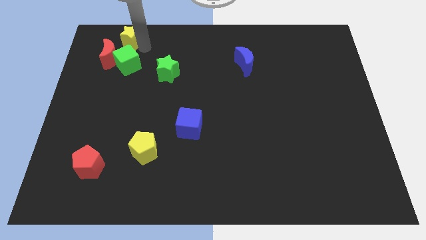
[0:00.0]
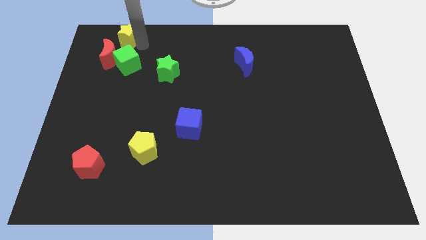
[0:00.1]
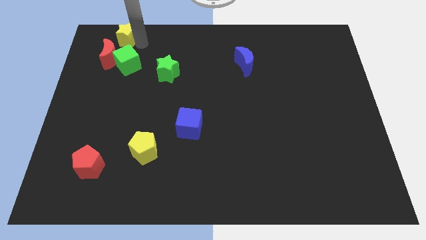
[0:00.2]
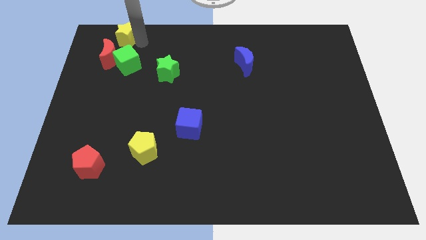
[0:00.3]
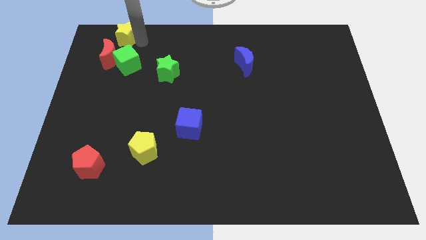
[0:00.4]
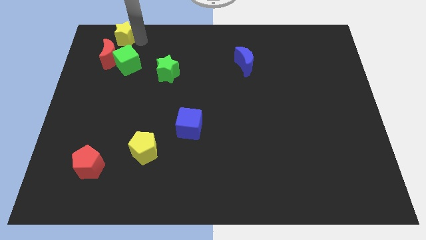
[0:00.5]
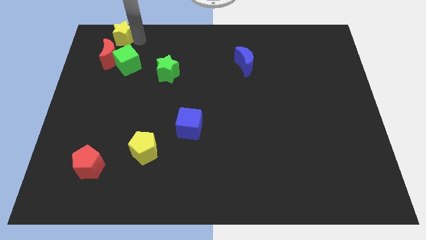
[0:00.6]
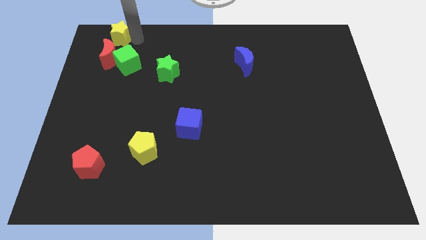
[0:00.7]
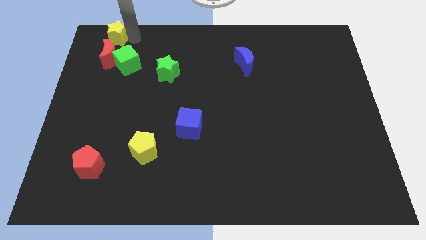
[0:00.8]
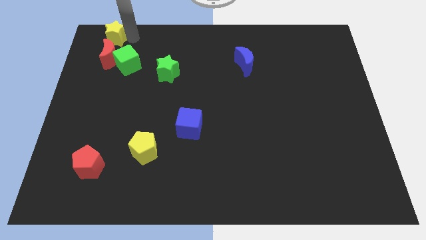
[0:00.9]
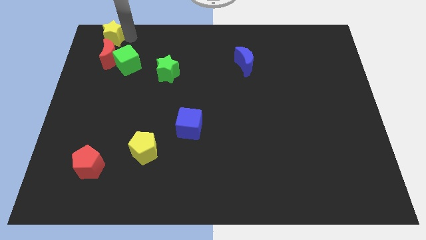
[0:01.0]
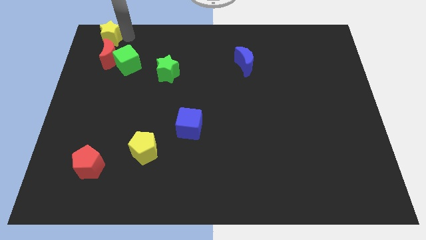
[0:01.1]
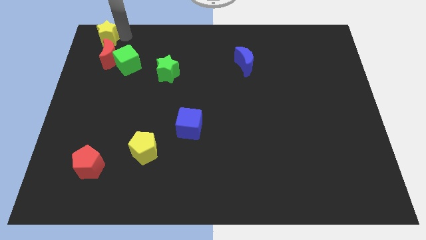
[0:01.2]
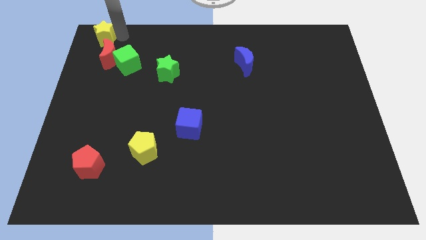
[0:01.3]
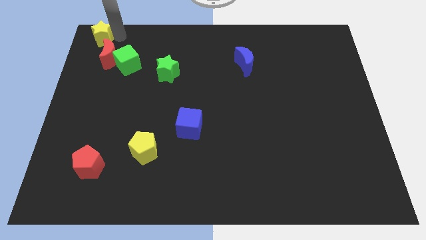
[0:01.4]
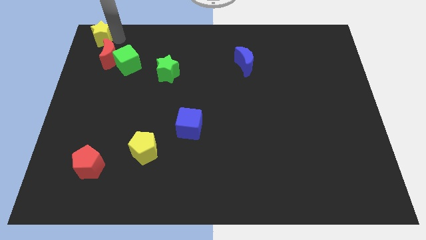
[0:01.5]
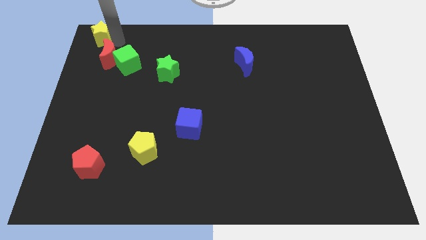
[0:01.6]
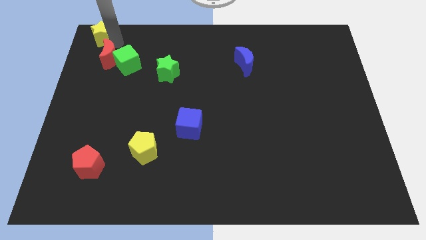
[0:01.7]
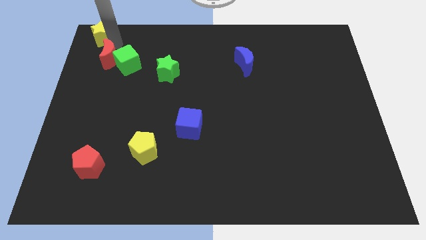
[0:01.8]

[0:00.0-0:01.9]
push the yellow star to the top left side of the red moon

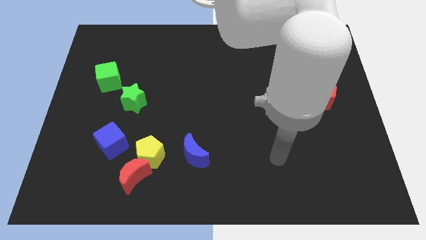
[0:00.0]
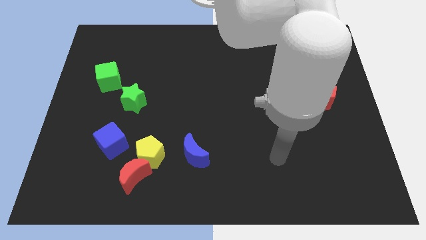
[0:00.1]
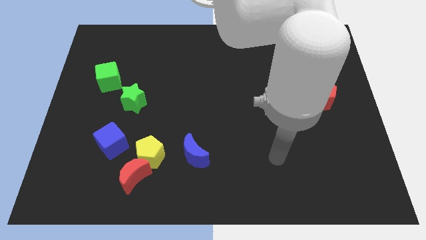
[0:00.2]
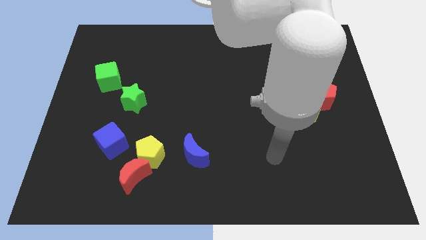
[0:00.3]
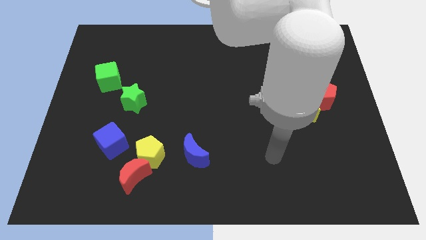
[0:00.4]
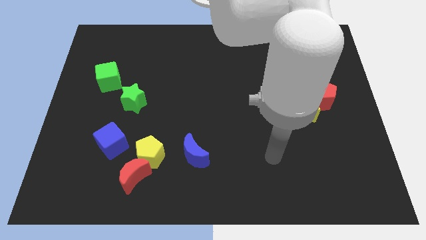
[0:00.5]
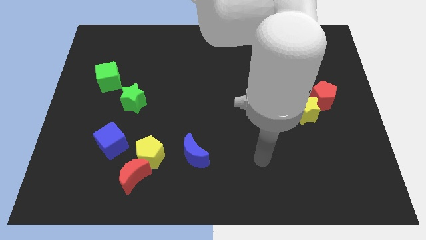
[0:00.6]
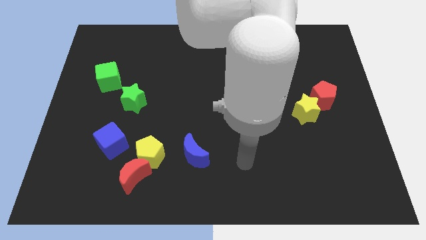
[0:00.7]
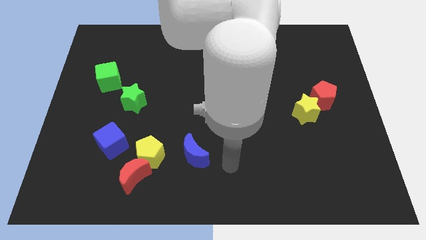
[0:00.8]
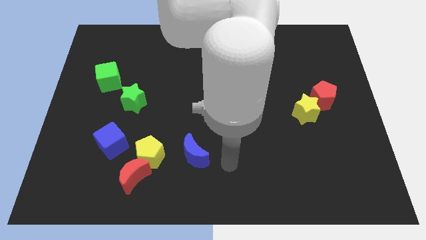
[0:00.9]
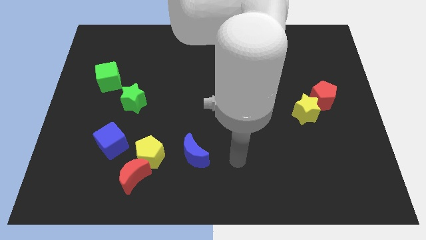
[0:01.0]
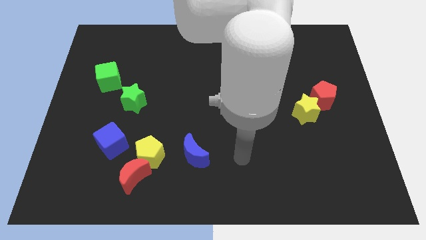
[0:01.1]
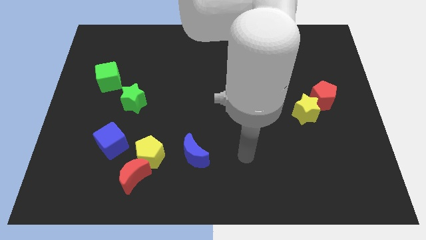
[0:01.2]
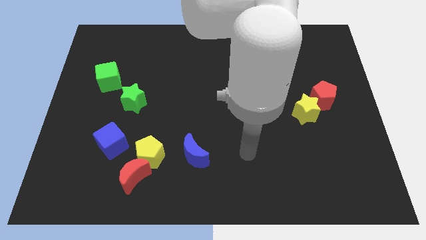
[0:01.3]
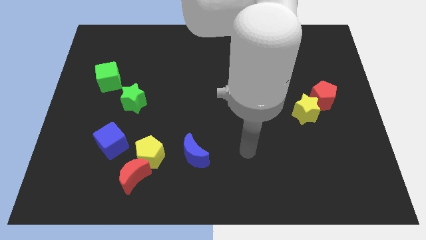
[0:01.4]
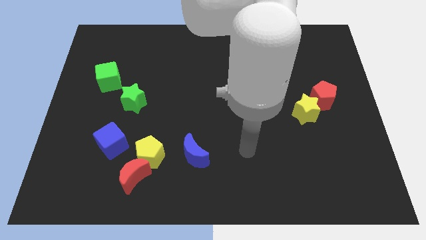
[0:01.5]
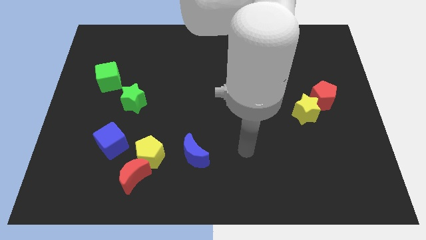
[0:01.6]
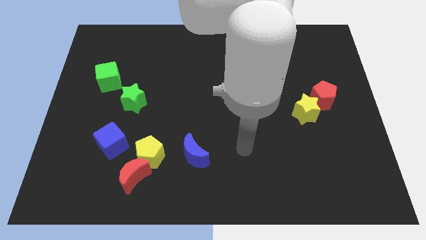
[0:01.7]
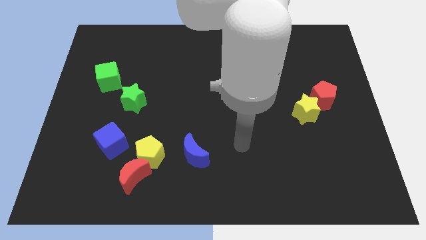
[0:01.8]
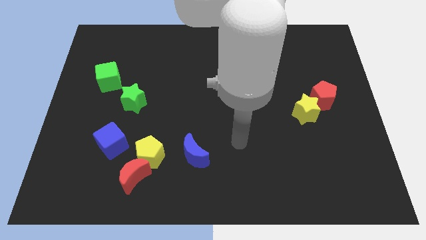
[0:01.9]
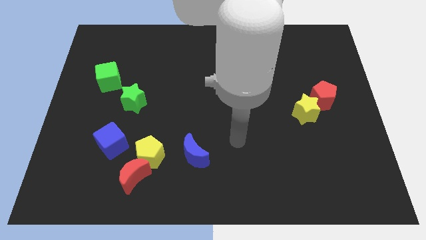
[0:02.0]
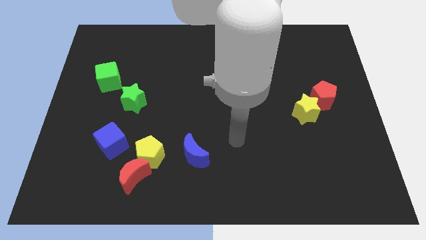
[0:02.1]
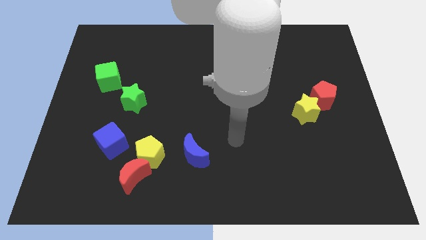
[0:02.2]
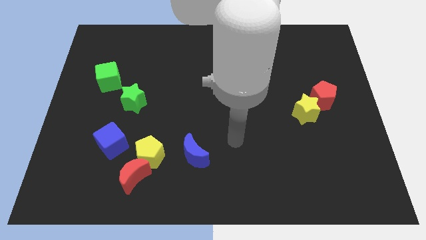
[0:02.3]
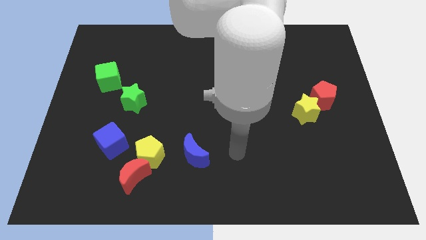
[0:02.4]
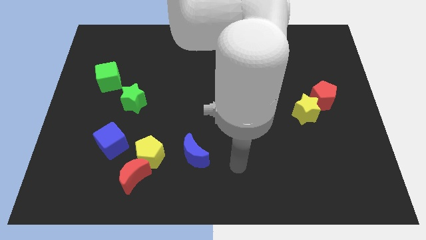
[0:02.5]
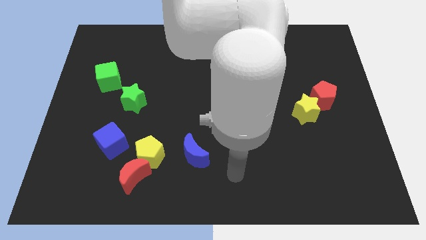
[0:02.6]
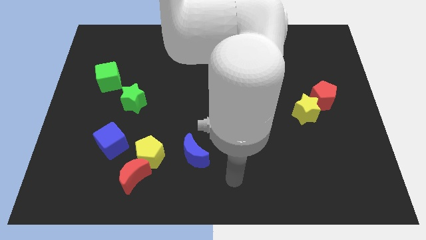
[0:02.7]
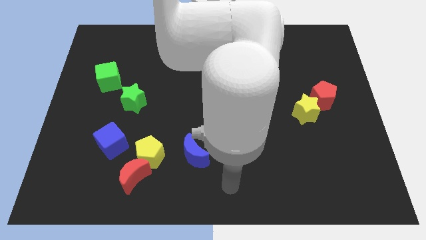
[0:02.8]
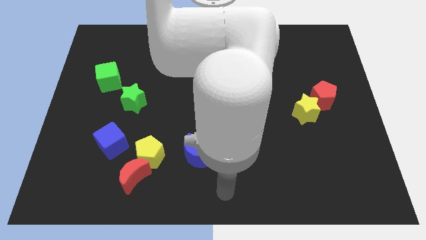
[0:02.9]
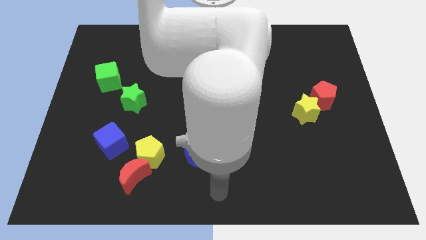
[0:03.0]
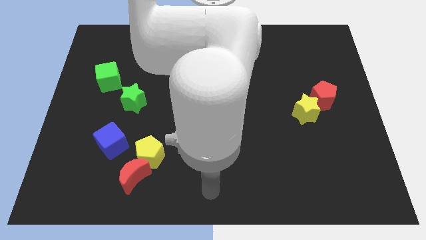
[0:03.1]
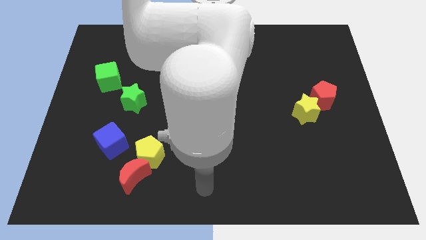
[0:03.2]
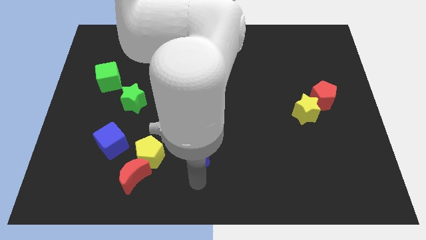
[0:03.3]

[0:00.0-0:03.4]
point the arm below the blue crescent

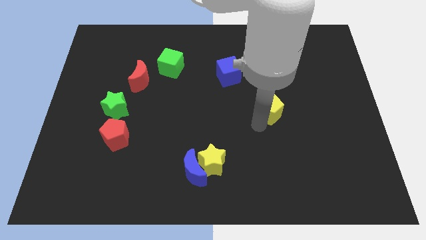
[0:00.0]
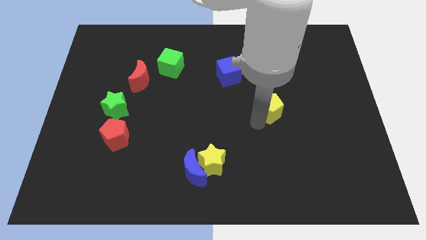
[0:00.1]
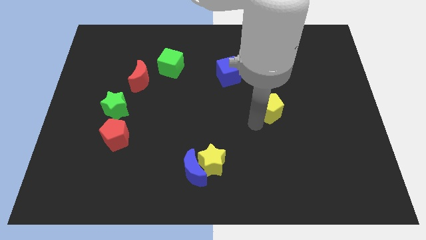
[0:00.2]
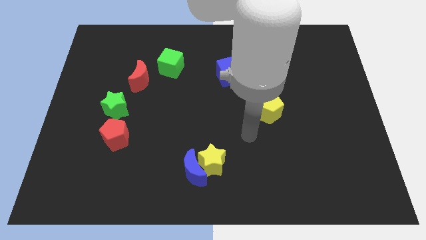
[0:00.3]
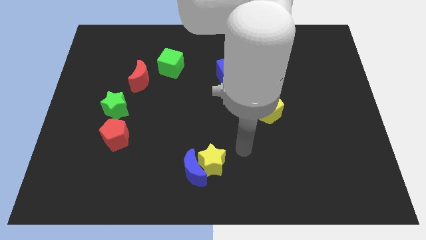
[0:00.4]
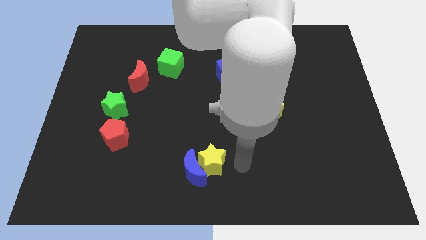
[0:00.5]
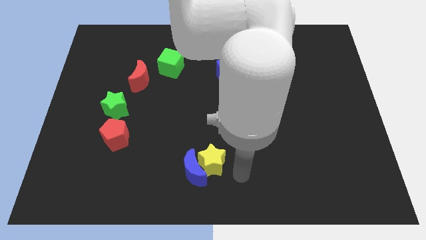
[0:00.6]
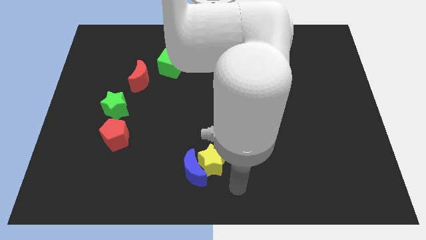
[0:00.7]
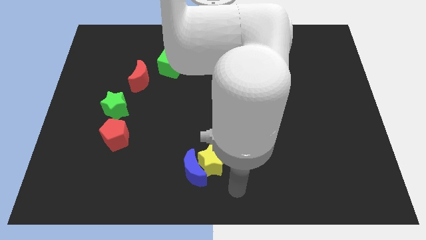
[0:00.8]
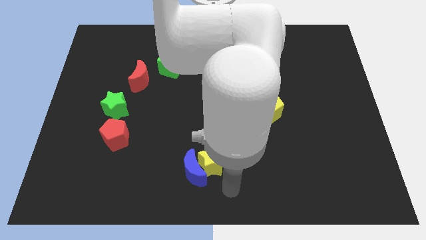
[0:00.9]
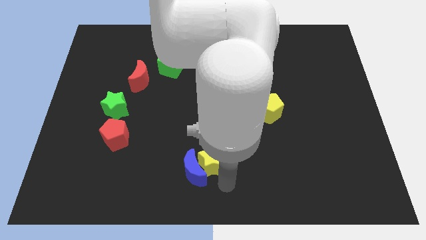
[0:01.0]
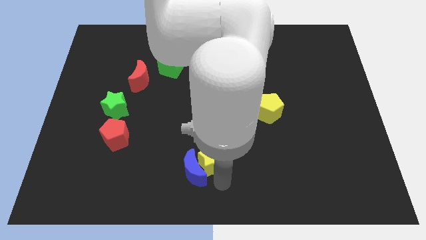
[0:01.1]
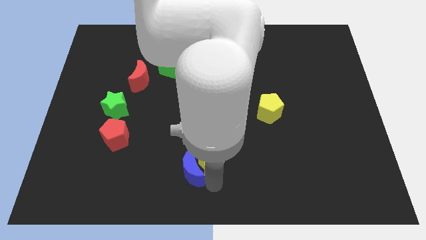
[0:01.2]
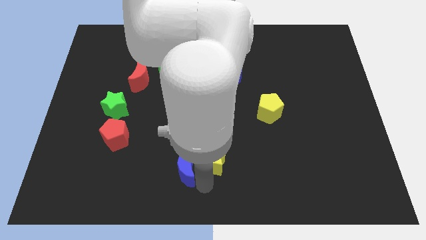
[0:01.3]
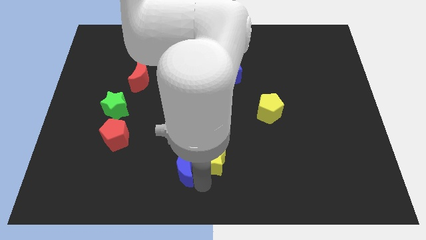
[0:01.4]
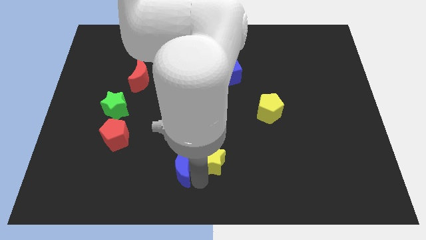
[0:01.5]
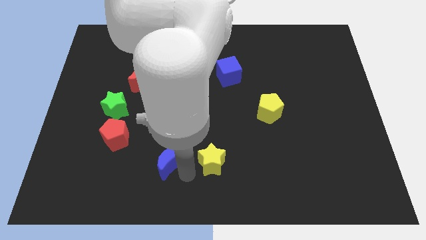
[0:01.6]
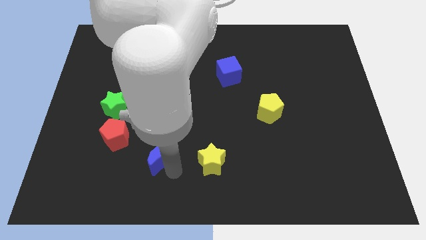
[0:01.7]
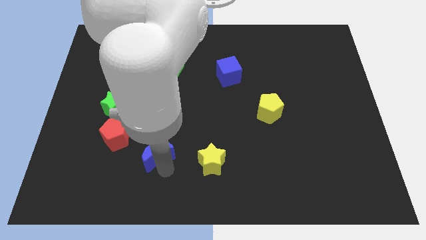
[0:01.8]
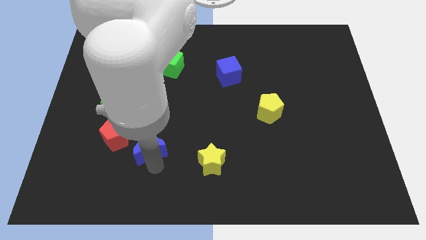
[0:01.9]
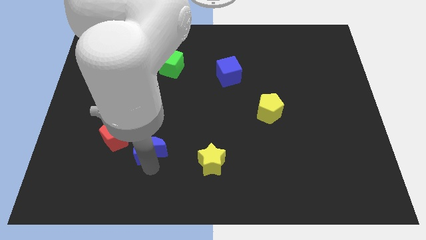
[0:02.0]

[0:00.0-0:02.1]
move the blue moon away from the yellow star

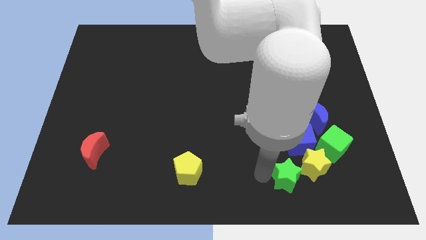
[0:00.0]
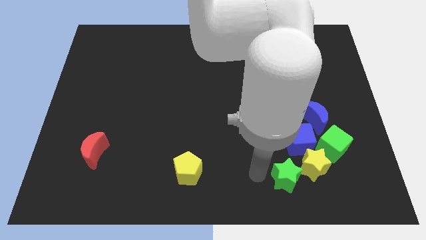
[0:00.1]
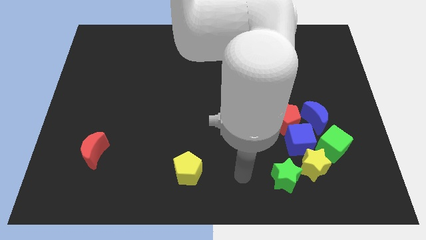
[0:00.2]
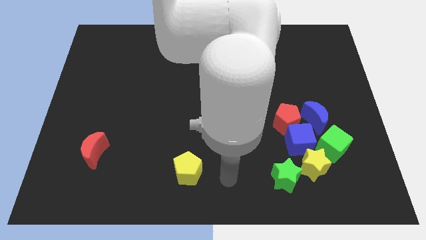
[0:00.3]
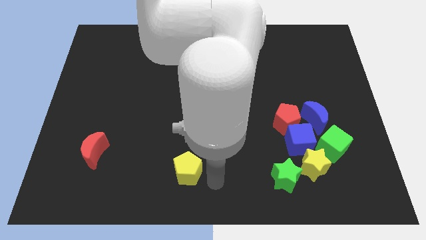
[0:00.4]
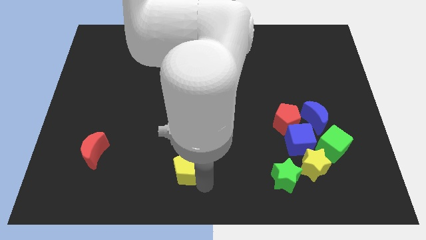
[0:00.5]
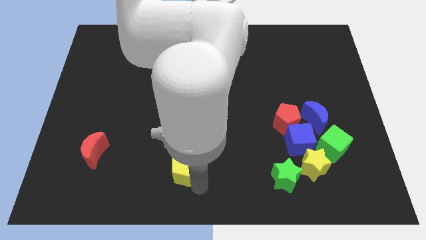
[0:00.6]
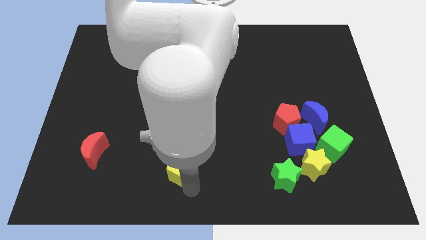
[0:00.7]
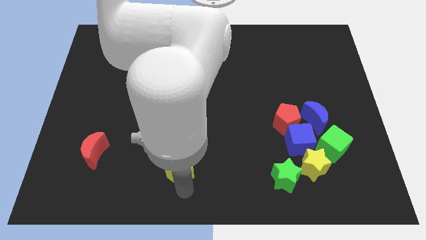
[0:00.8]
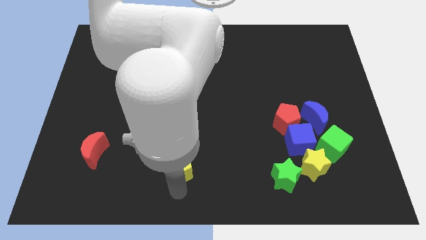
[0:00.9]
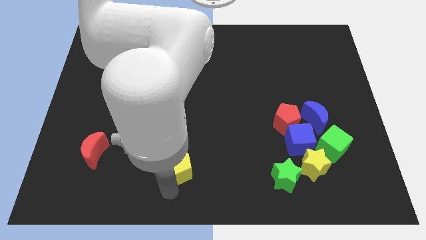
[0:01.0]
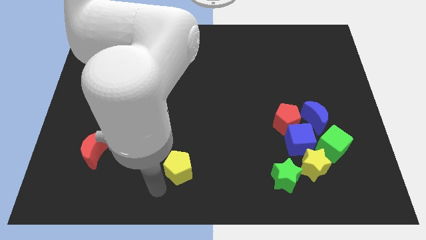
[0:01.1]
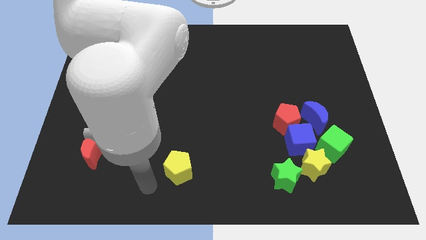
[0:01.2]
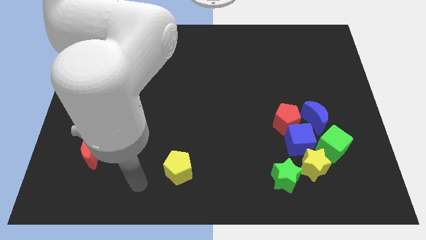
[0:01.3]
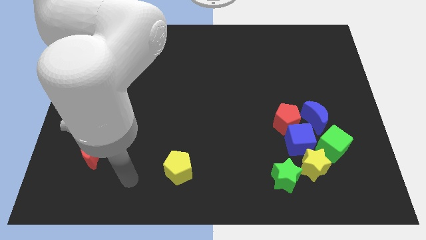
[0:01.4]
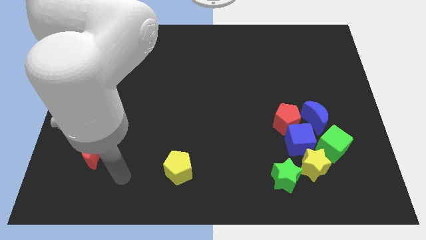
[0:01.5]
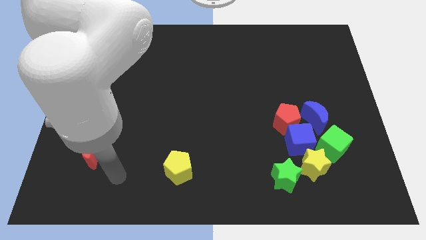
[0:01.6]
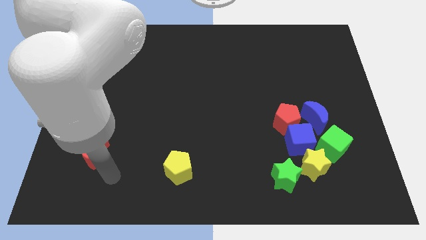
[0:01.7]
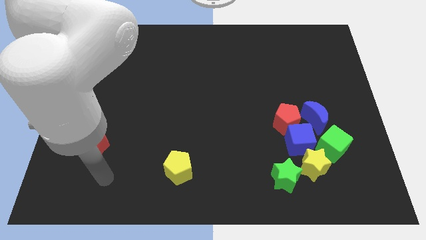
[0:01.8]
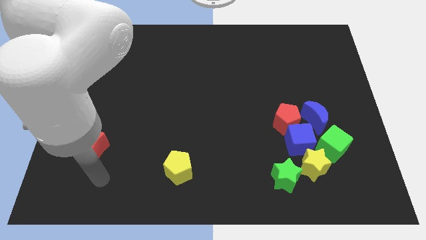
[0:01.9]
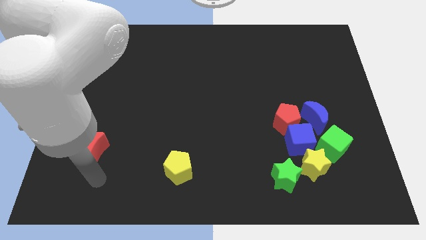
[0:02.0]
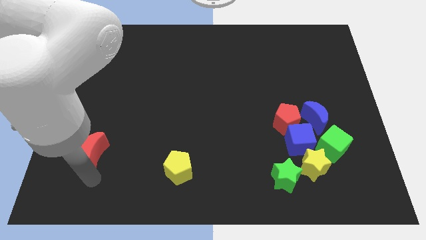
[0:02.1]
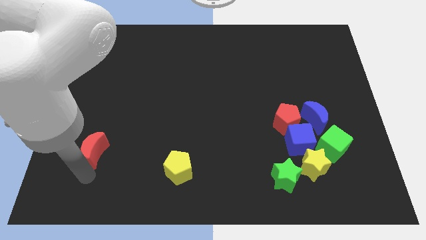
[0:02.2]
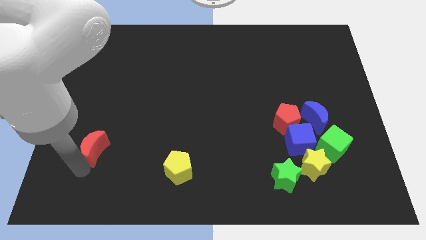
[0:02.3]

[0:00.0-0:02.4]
move your arm from green star to the red moon
